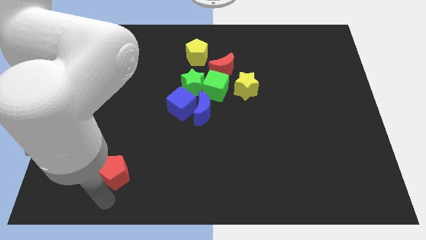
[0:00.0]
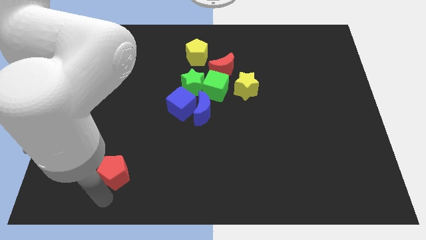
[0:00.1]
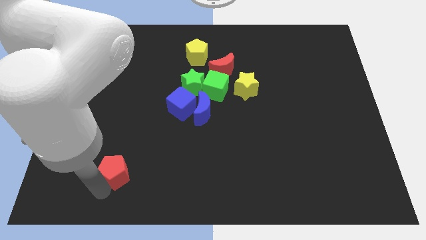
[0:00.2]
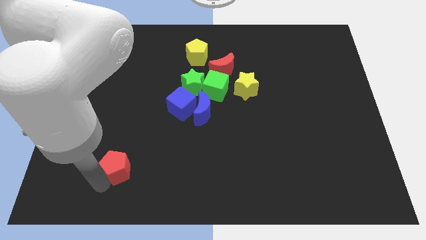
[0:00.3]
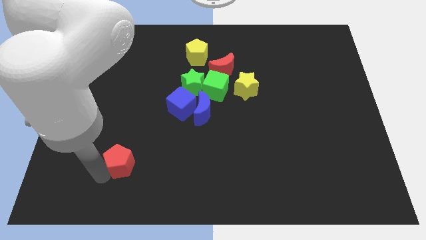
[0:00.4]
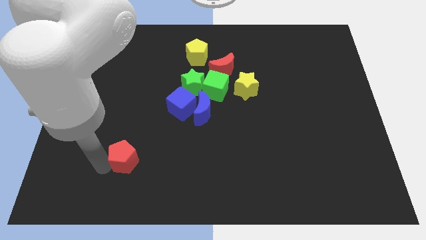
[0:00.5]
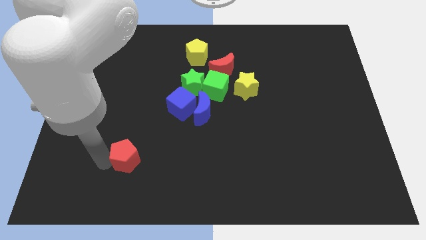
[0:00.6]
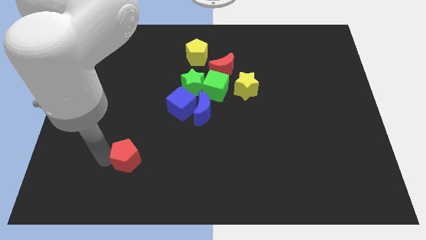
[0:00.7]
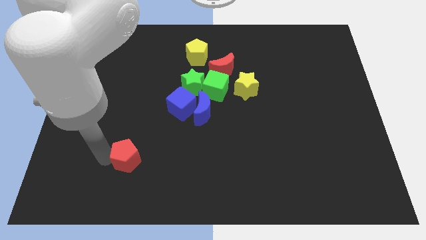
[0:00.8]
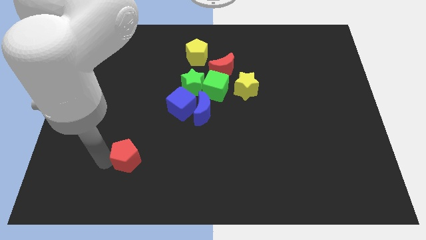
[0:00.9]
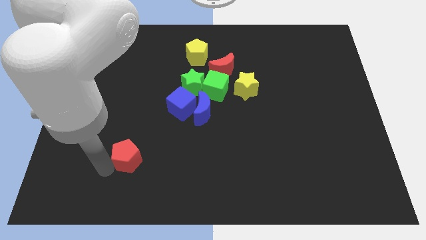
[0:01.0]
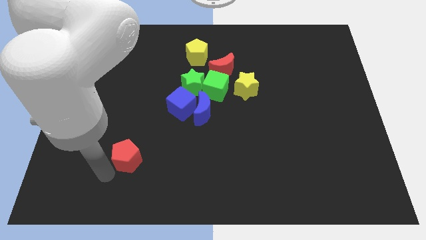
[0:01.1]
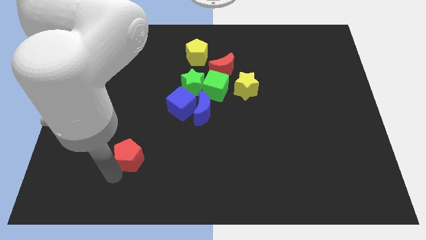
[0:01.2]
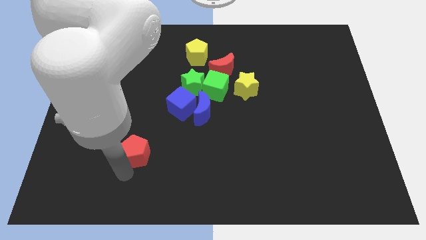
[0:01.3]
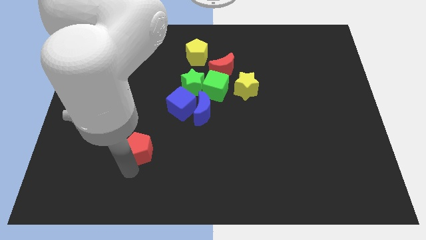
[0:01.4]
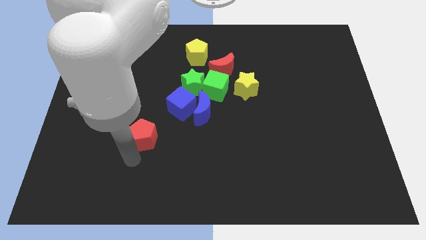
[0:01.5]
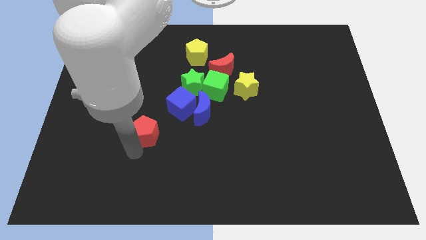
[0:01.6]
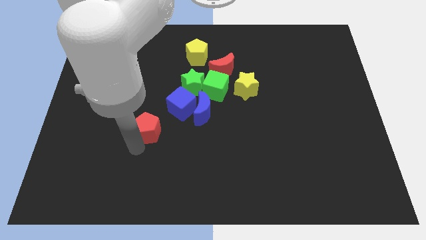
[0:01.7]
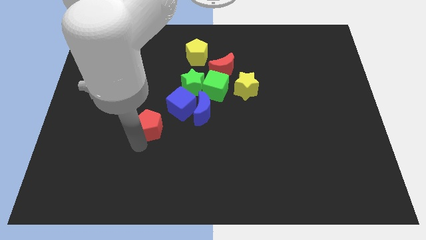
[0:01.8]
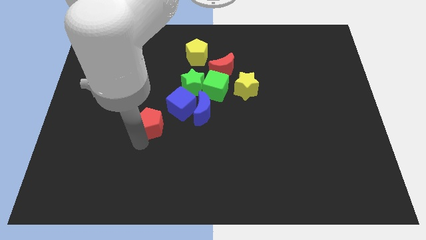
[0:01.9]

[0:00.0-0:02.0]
slide the red pentagon towards the blue cube

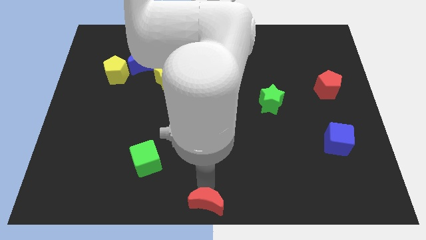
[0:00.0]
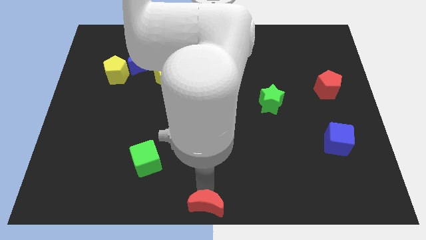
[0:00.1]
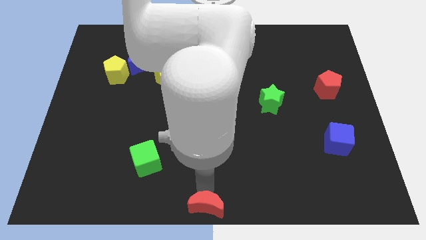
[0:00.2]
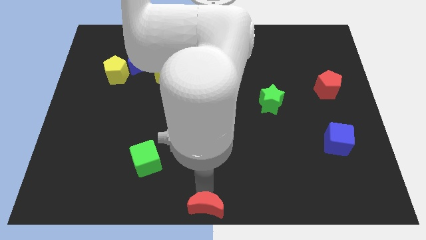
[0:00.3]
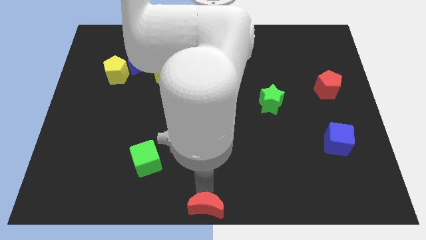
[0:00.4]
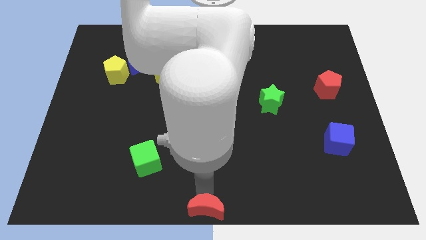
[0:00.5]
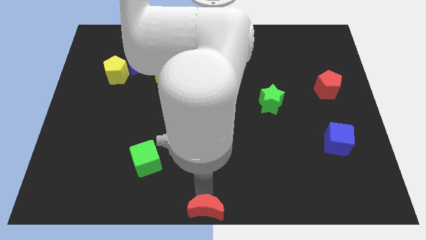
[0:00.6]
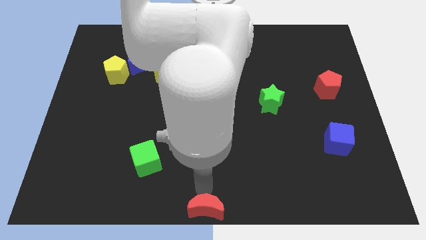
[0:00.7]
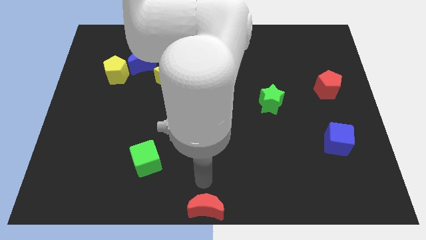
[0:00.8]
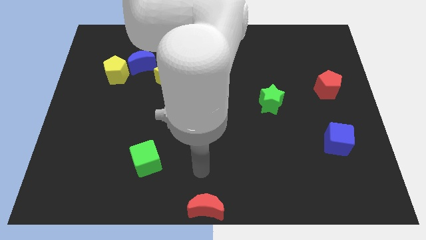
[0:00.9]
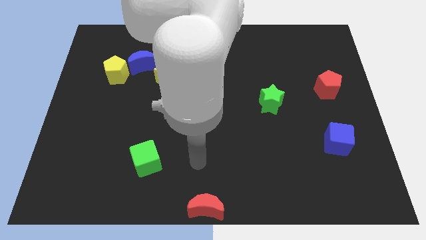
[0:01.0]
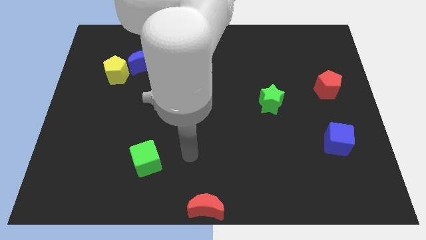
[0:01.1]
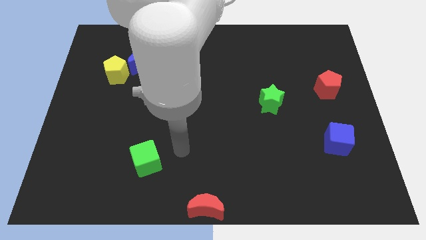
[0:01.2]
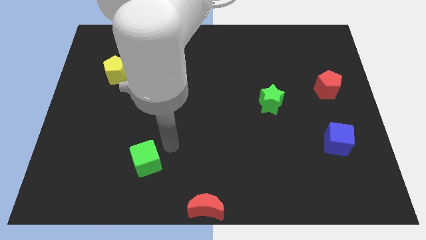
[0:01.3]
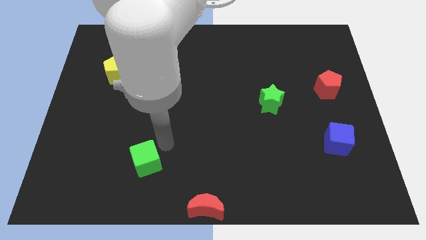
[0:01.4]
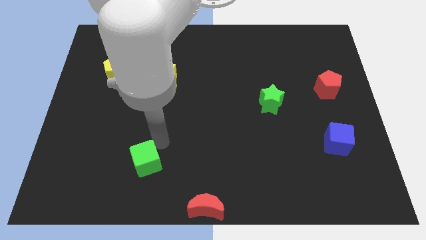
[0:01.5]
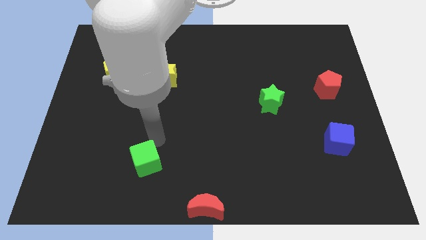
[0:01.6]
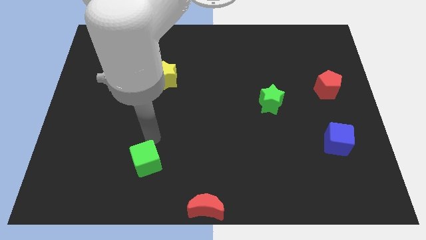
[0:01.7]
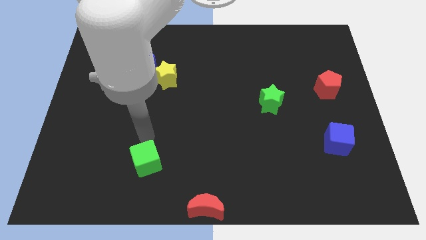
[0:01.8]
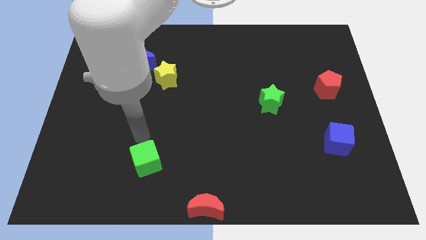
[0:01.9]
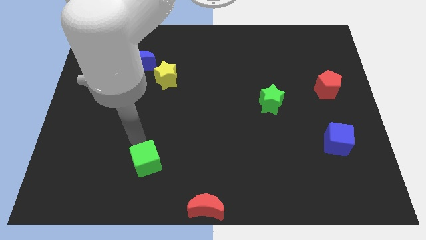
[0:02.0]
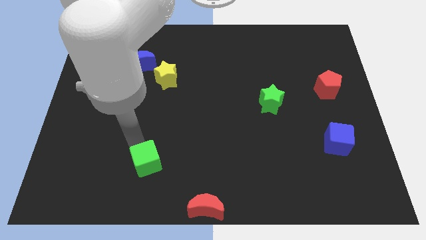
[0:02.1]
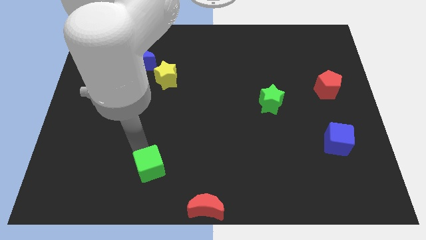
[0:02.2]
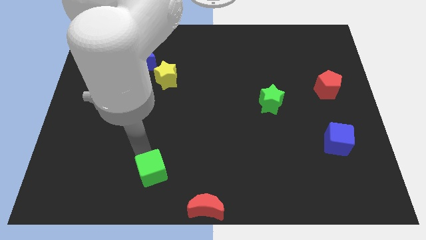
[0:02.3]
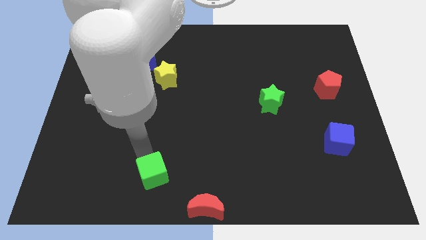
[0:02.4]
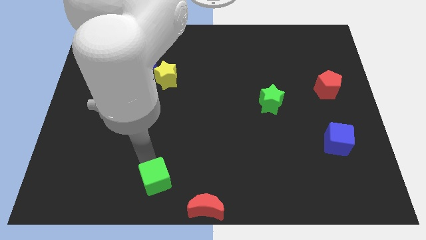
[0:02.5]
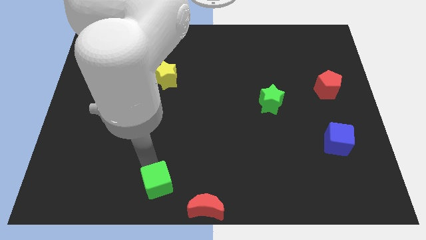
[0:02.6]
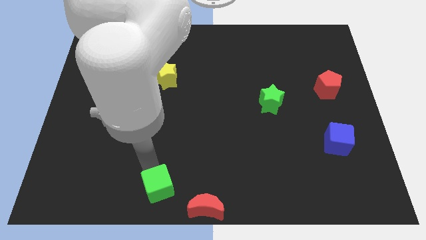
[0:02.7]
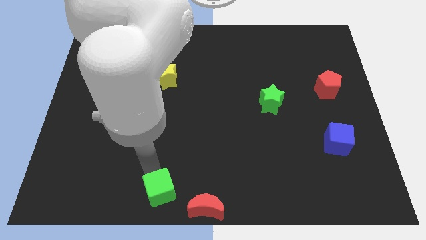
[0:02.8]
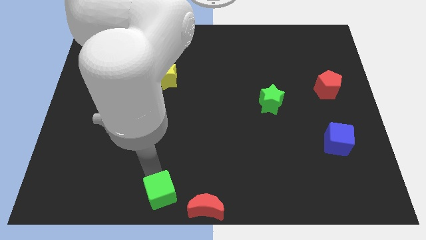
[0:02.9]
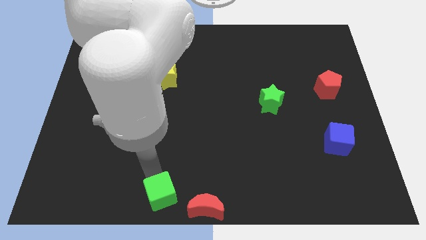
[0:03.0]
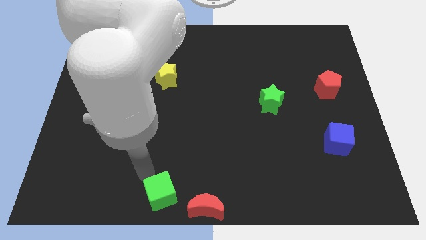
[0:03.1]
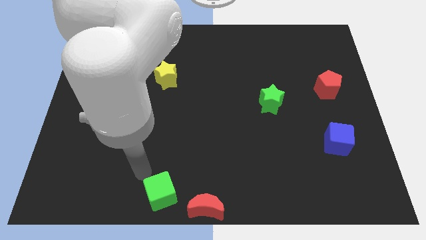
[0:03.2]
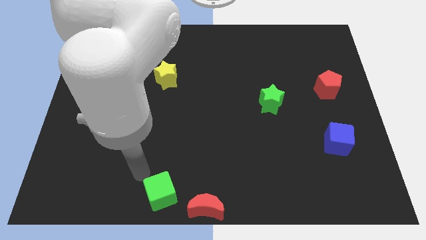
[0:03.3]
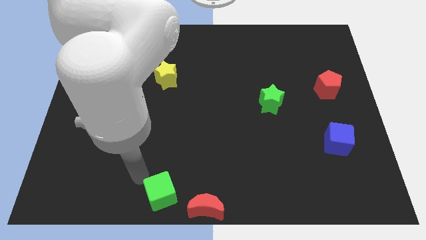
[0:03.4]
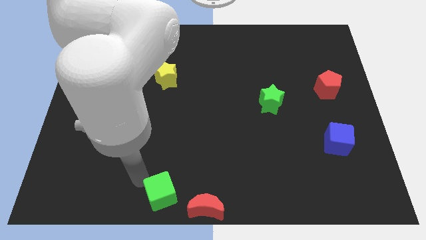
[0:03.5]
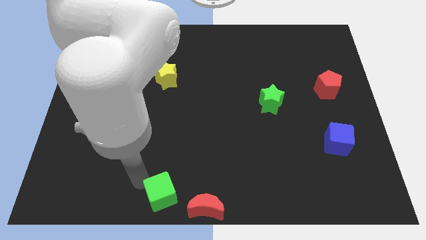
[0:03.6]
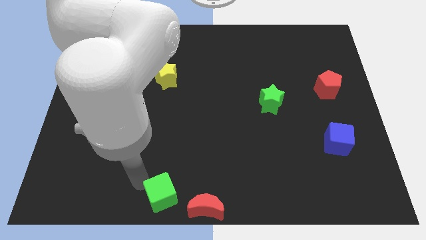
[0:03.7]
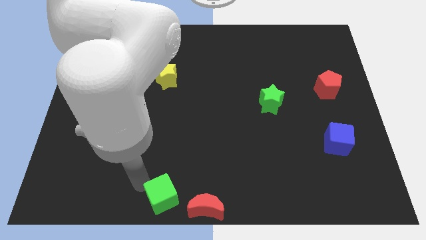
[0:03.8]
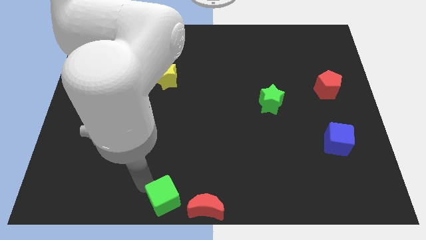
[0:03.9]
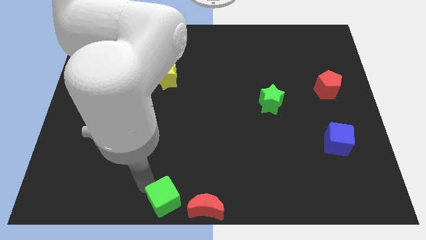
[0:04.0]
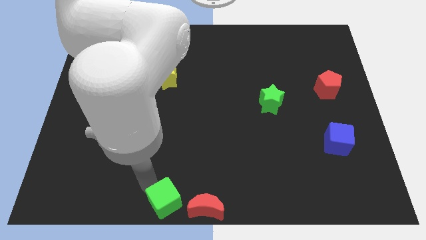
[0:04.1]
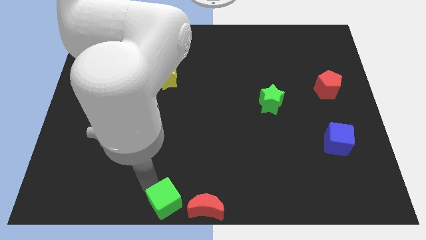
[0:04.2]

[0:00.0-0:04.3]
move the green cube towards the red crescent

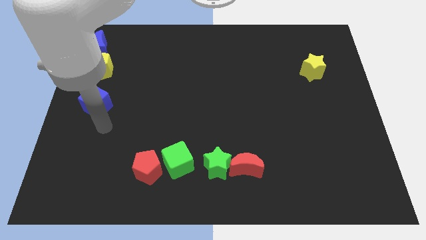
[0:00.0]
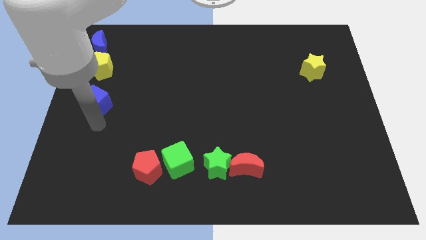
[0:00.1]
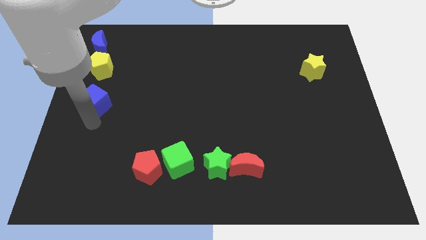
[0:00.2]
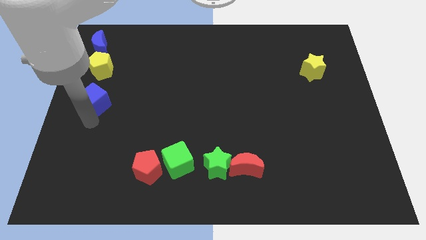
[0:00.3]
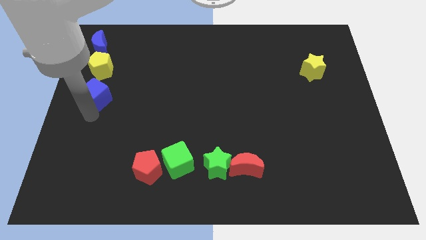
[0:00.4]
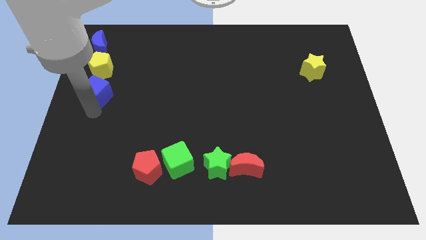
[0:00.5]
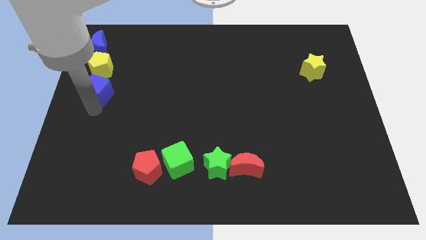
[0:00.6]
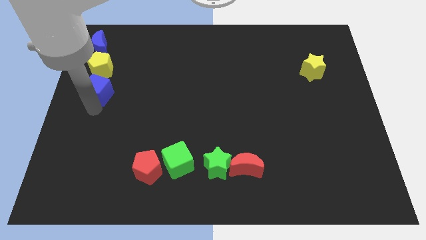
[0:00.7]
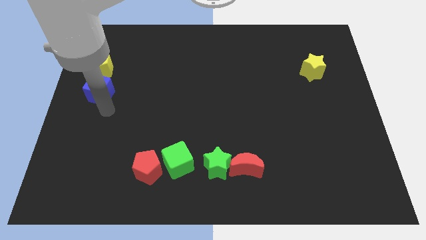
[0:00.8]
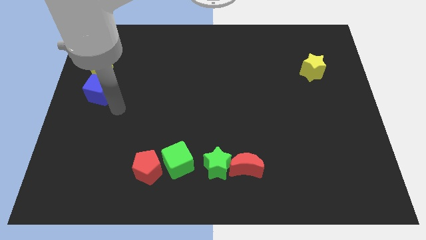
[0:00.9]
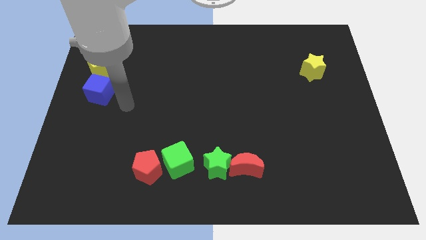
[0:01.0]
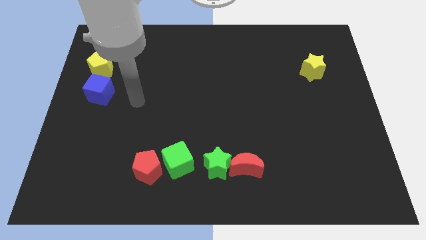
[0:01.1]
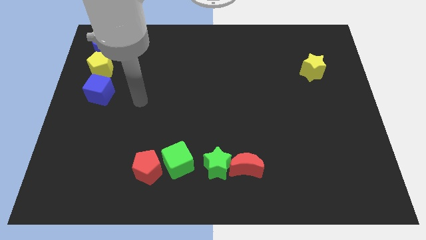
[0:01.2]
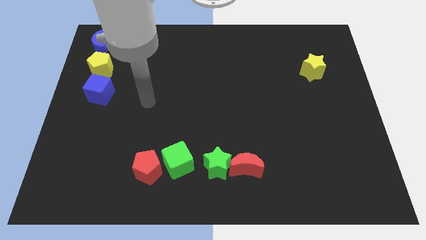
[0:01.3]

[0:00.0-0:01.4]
move the blue cube below the yellow pentagon

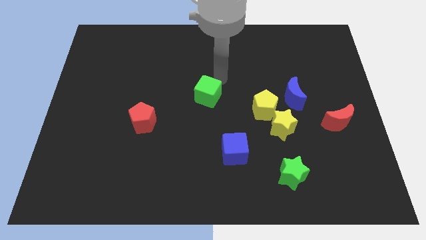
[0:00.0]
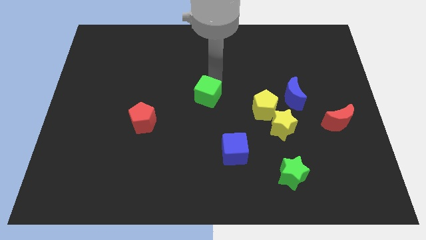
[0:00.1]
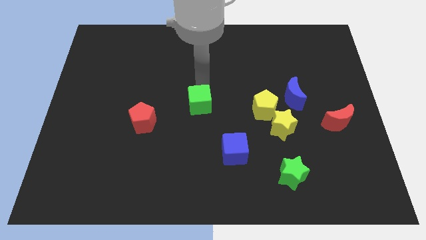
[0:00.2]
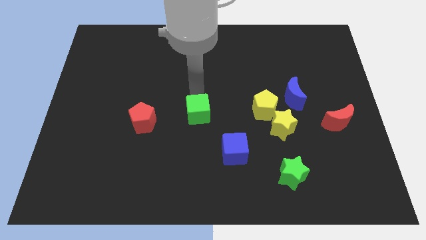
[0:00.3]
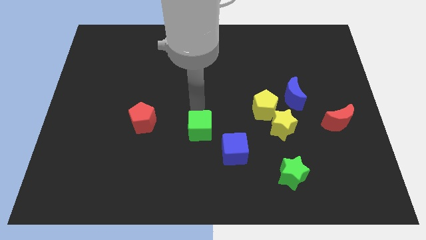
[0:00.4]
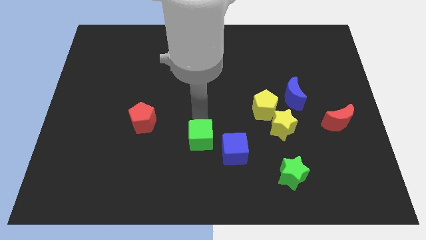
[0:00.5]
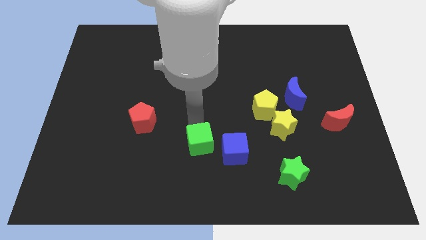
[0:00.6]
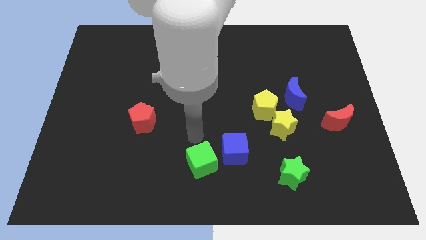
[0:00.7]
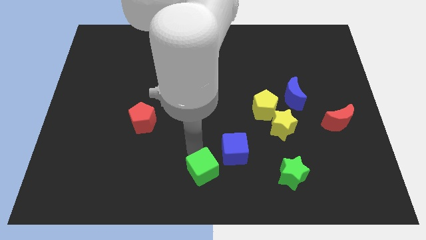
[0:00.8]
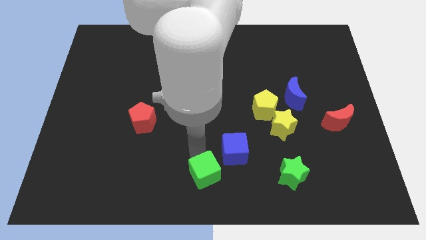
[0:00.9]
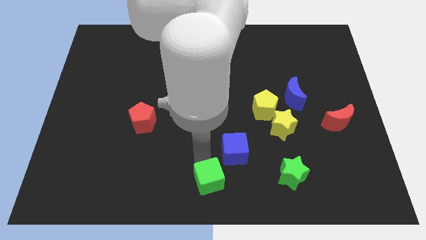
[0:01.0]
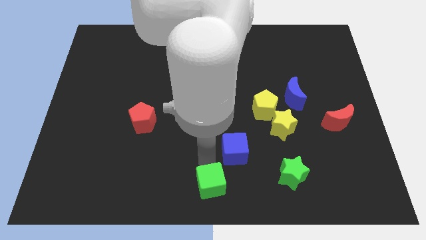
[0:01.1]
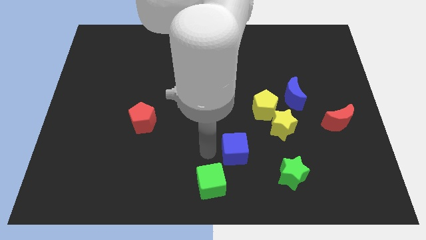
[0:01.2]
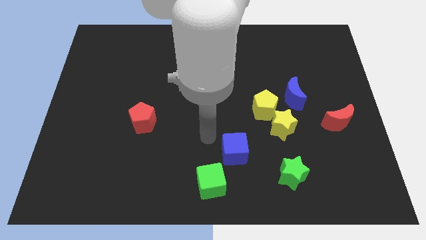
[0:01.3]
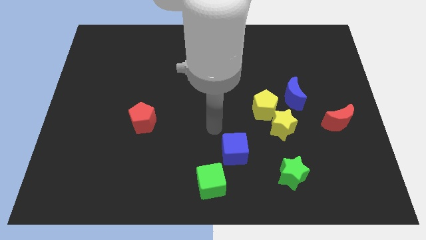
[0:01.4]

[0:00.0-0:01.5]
push the green cube to the bottom left of the blue cube
